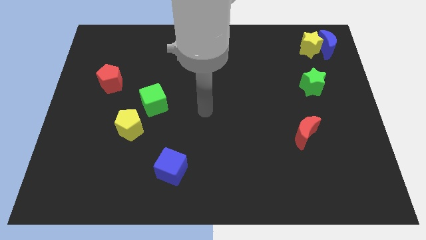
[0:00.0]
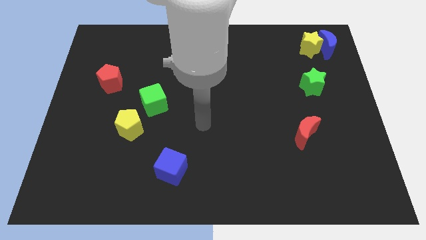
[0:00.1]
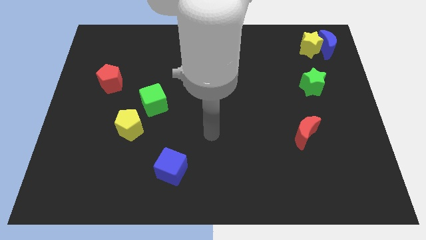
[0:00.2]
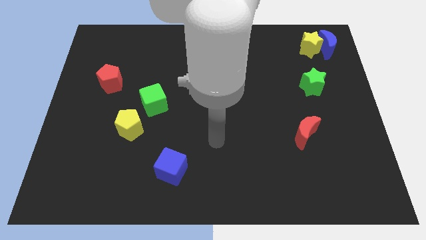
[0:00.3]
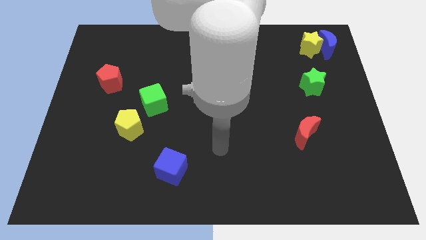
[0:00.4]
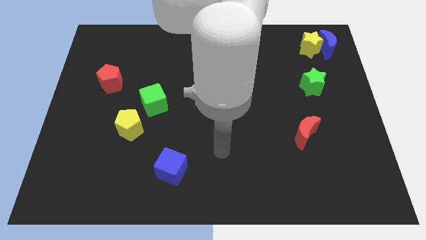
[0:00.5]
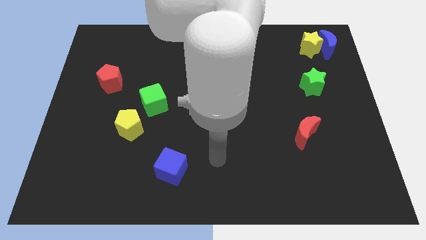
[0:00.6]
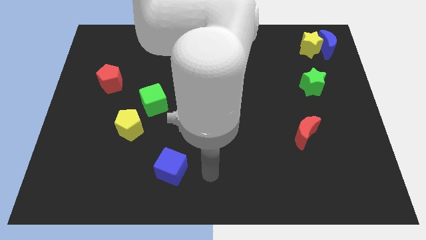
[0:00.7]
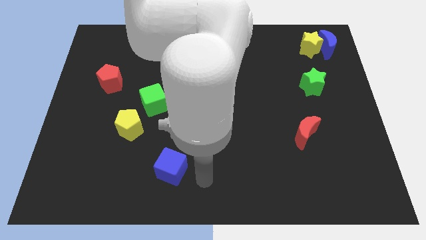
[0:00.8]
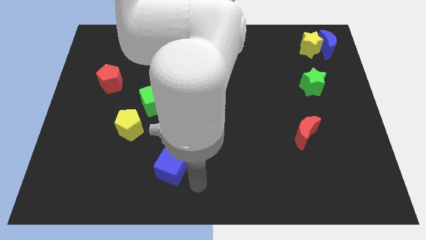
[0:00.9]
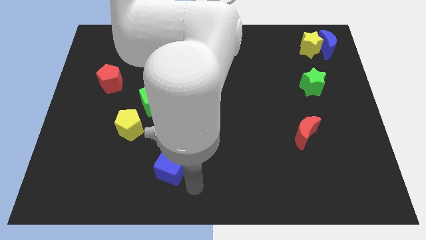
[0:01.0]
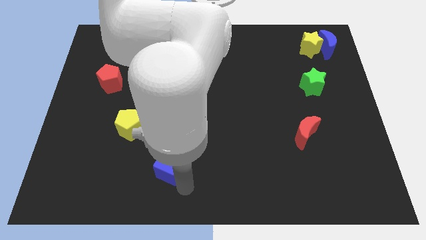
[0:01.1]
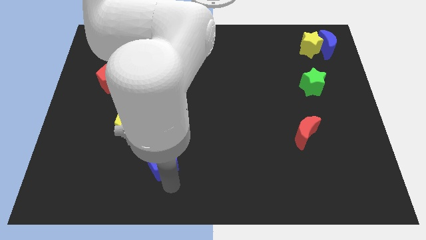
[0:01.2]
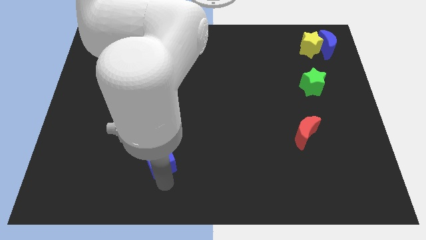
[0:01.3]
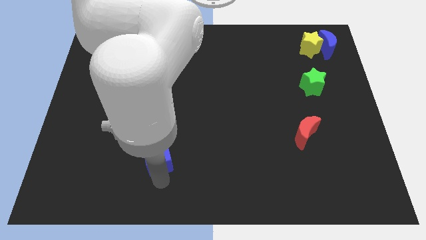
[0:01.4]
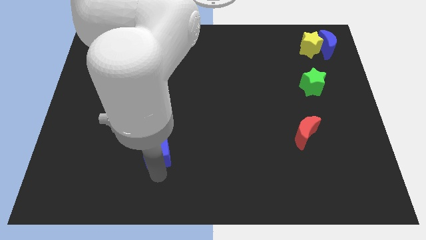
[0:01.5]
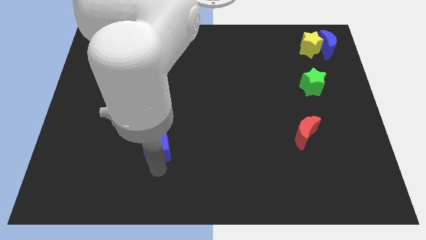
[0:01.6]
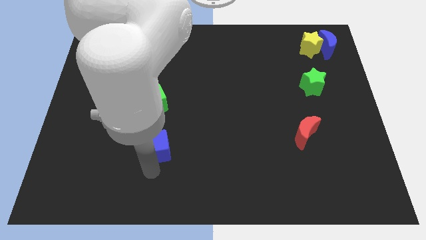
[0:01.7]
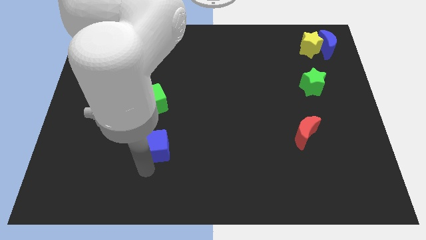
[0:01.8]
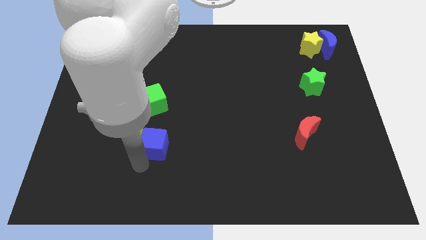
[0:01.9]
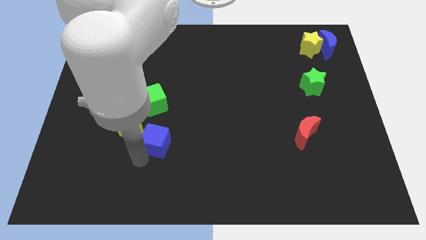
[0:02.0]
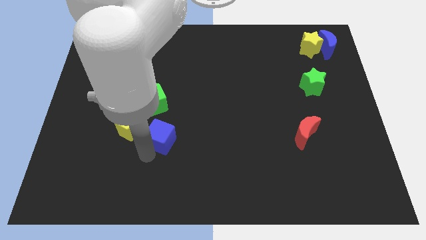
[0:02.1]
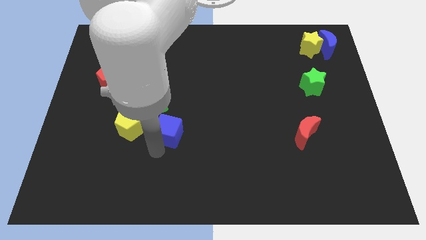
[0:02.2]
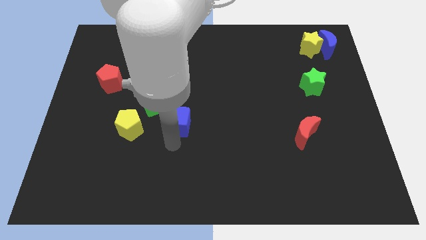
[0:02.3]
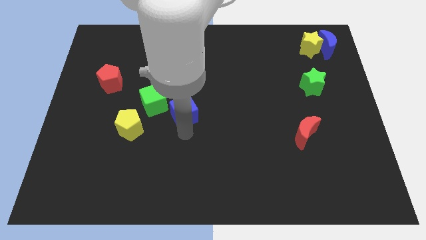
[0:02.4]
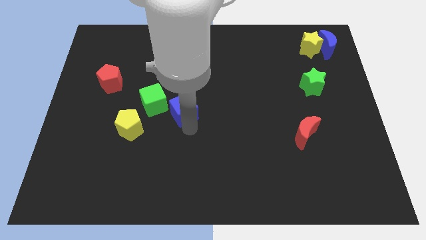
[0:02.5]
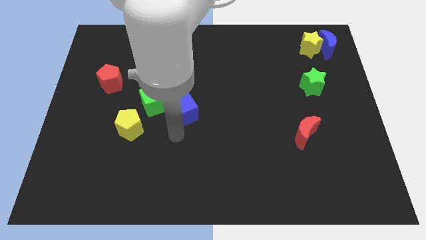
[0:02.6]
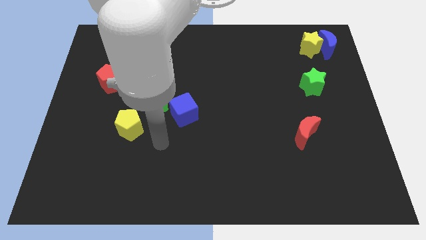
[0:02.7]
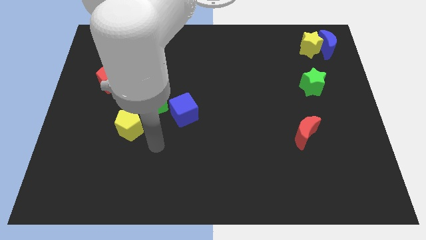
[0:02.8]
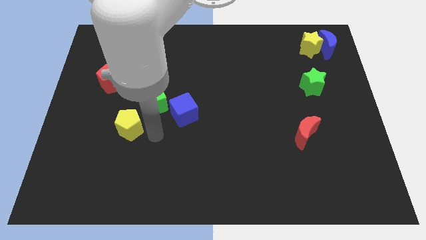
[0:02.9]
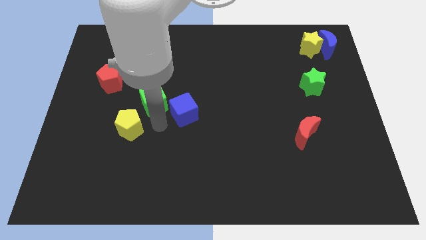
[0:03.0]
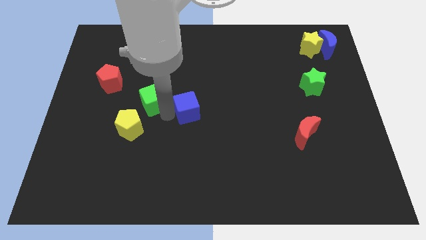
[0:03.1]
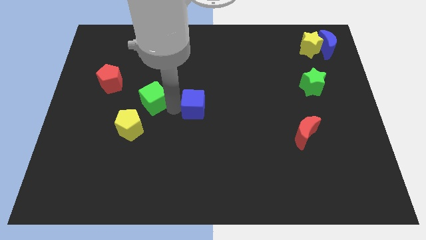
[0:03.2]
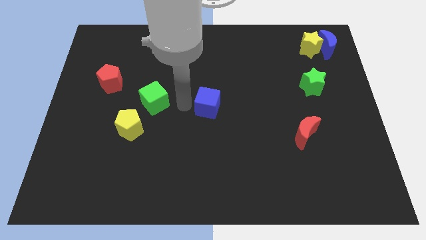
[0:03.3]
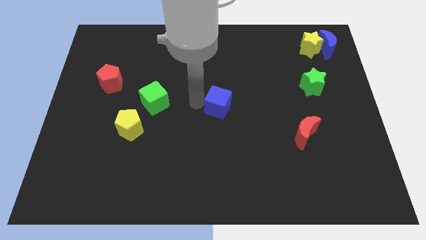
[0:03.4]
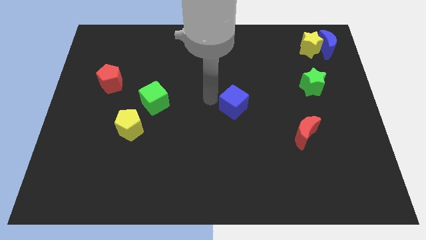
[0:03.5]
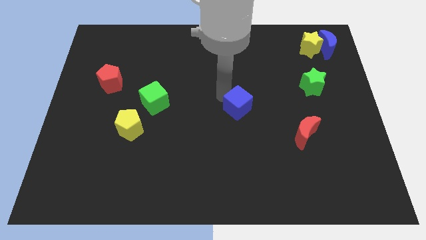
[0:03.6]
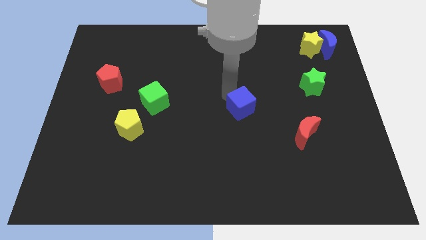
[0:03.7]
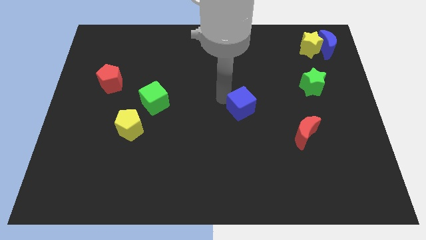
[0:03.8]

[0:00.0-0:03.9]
place the blue cube at the center

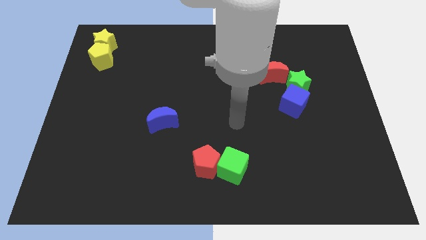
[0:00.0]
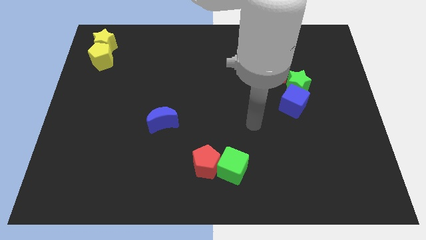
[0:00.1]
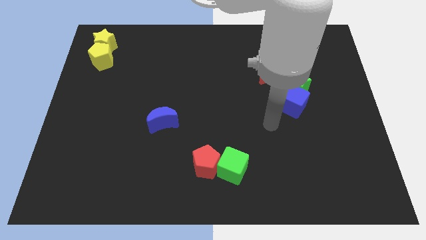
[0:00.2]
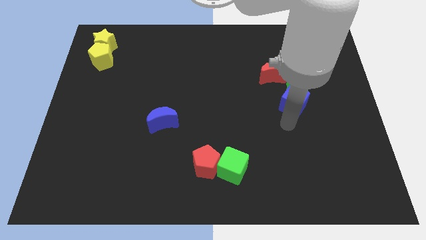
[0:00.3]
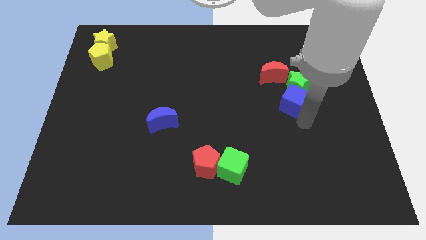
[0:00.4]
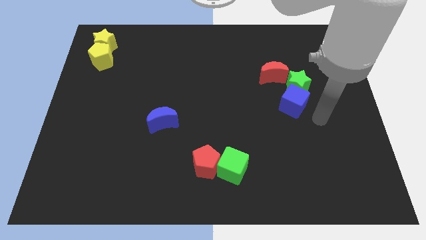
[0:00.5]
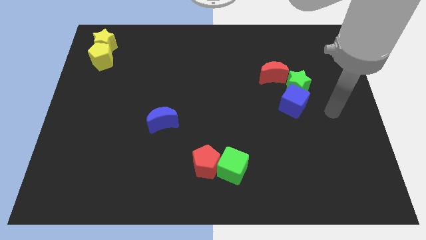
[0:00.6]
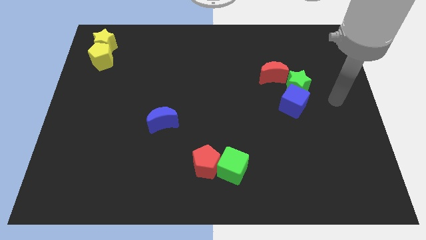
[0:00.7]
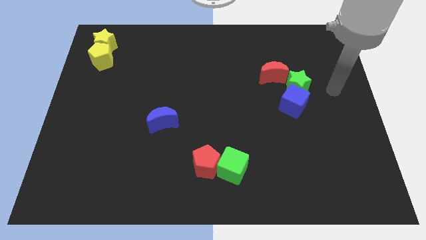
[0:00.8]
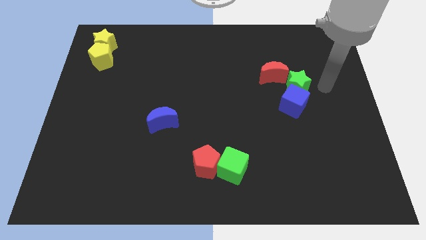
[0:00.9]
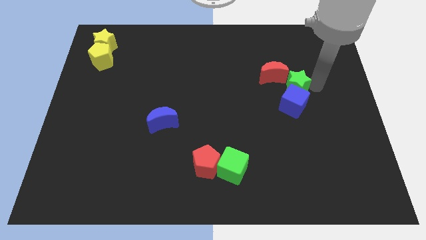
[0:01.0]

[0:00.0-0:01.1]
place arm at the right side of green star

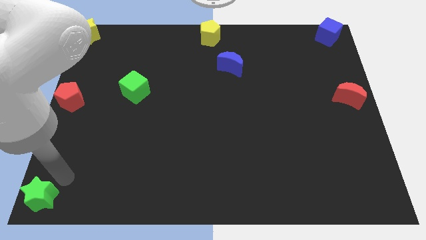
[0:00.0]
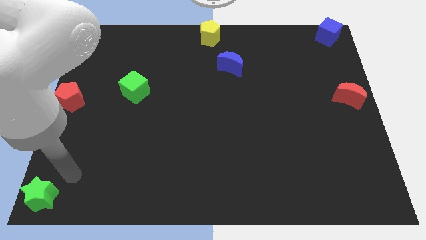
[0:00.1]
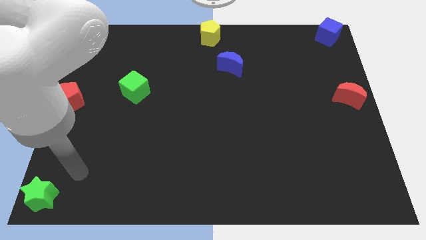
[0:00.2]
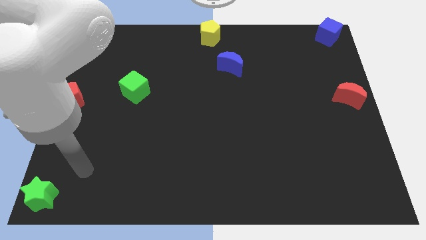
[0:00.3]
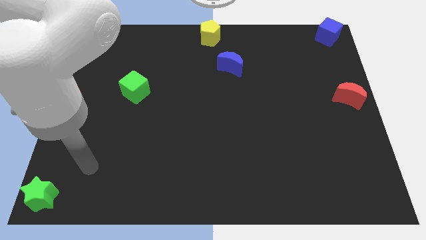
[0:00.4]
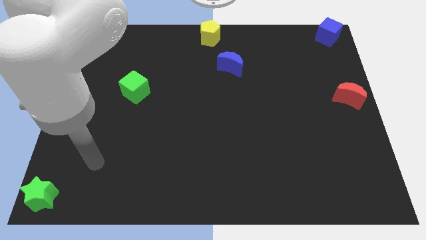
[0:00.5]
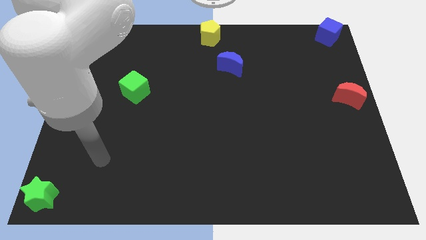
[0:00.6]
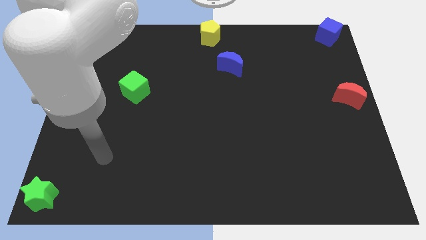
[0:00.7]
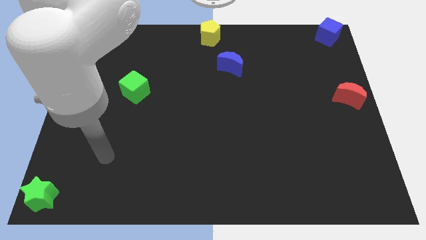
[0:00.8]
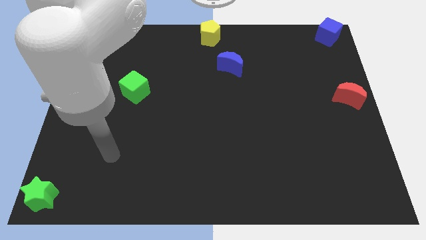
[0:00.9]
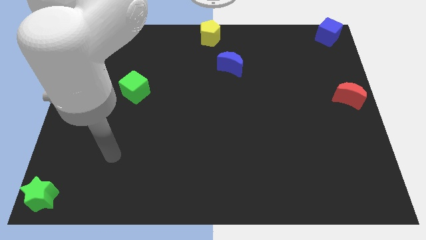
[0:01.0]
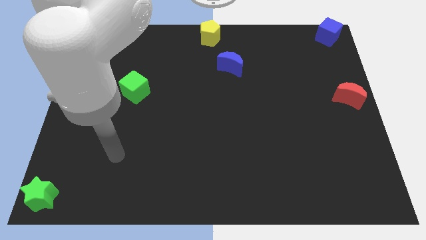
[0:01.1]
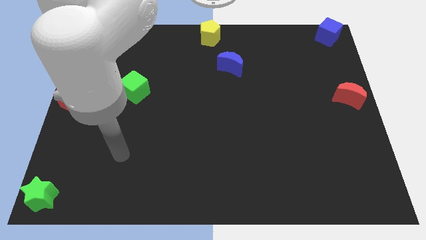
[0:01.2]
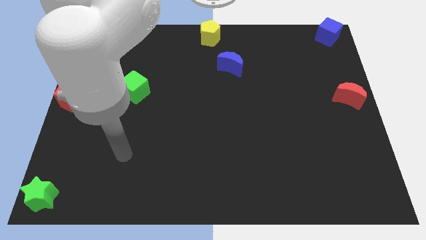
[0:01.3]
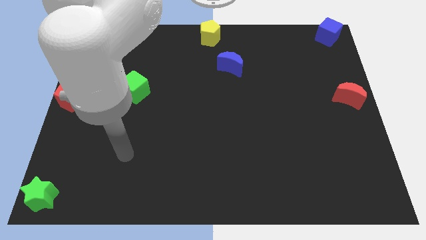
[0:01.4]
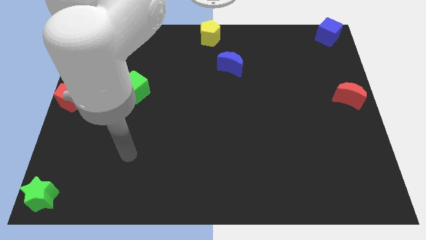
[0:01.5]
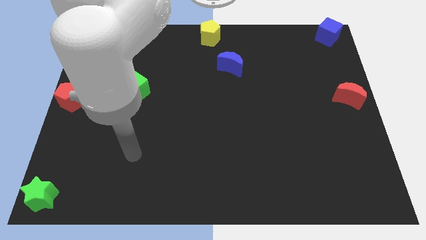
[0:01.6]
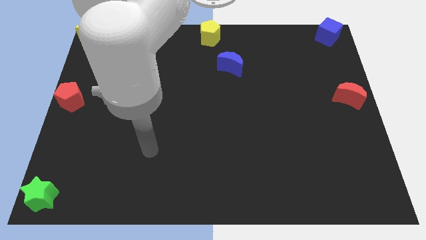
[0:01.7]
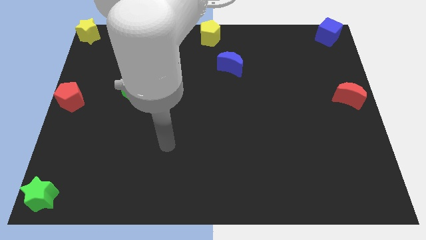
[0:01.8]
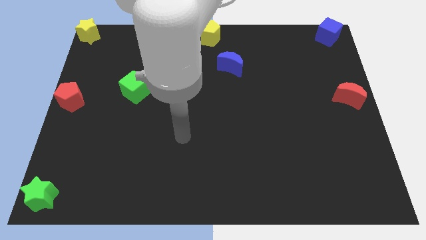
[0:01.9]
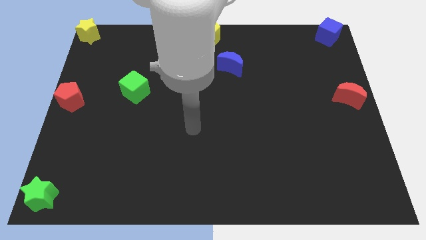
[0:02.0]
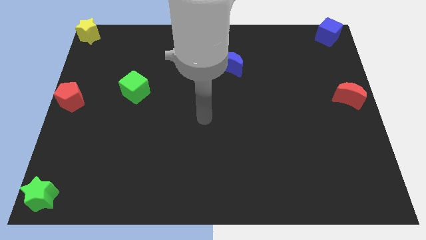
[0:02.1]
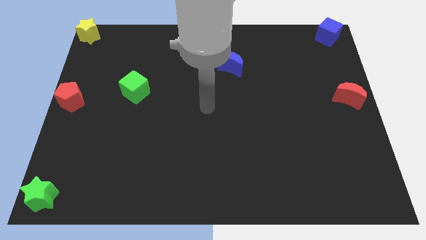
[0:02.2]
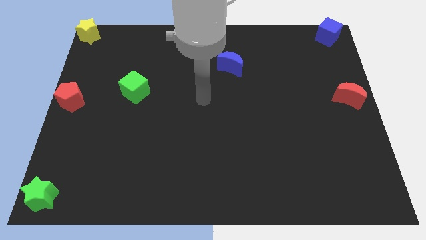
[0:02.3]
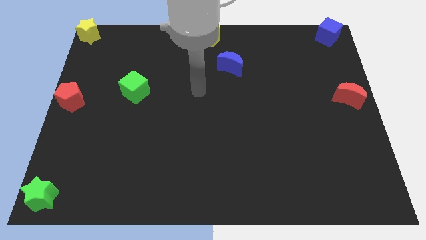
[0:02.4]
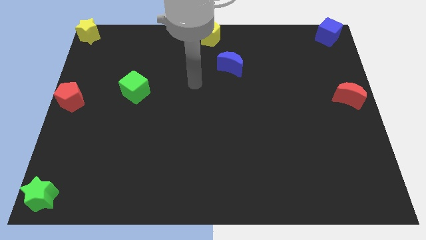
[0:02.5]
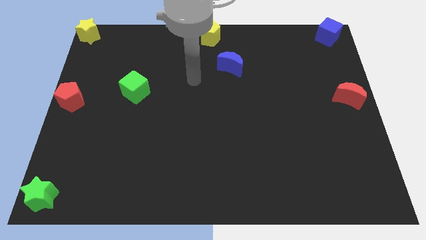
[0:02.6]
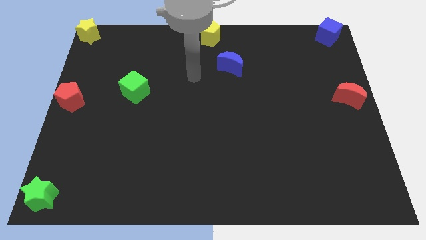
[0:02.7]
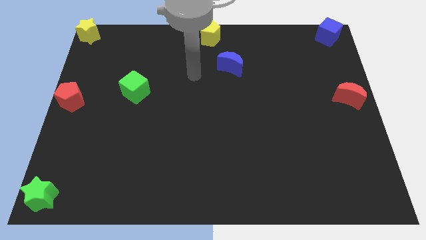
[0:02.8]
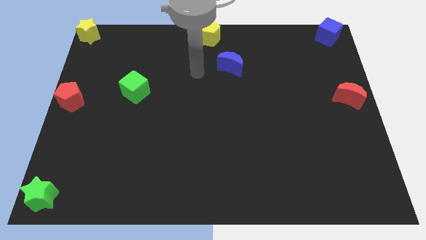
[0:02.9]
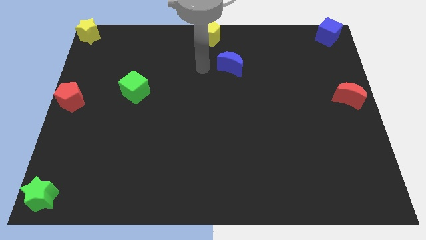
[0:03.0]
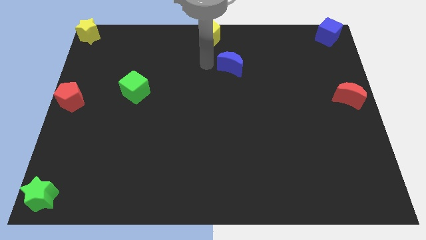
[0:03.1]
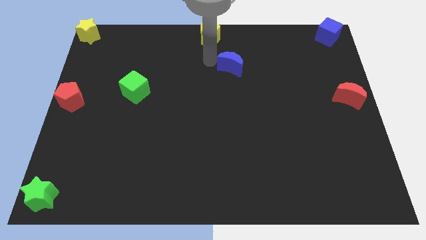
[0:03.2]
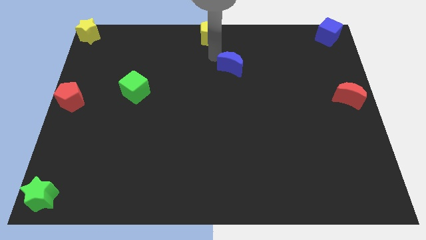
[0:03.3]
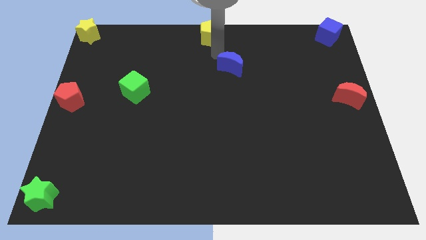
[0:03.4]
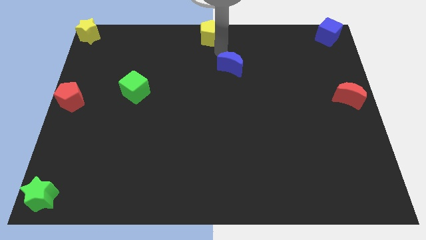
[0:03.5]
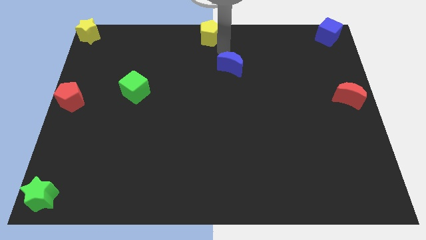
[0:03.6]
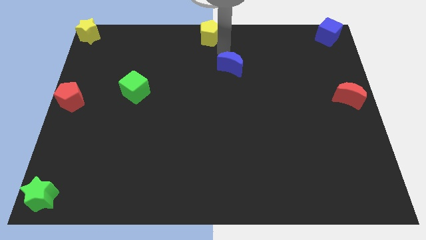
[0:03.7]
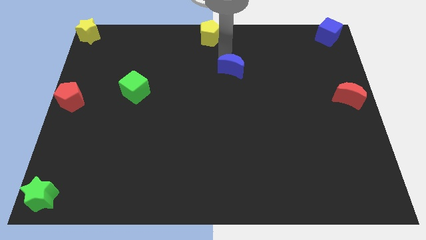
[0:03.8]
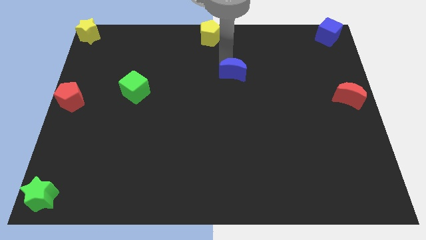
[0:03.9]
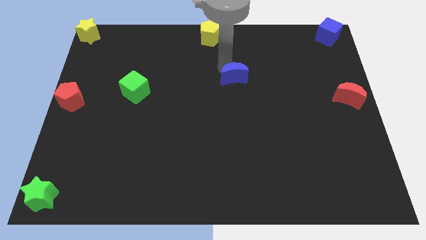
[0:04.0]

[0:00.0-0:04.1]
point your arm at the top left side of the blue moon
